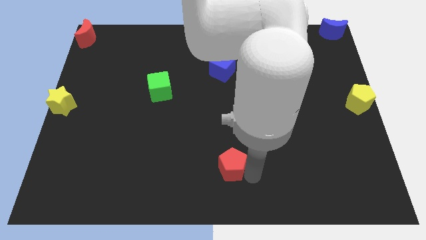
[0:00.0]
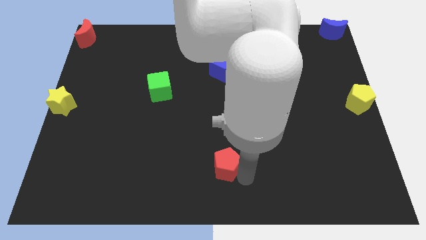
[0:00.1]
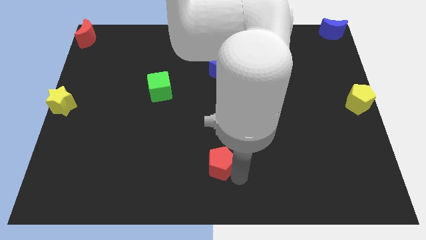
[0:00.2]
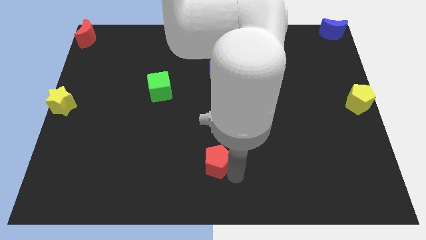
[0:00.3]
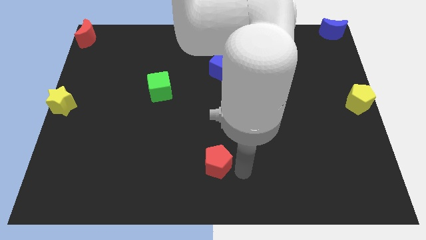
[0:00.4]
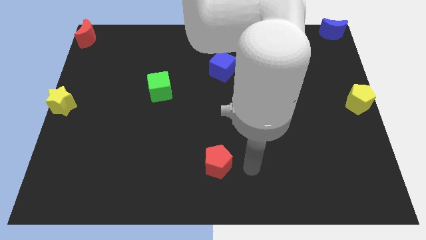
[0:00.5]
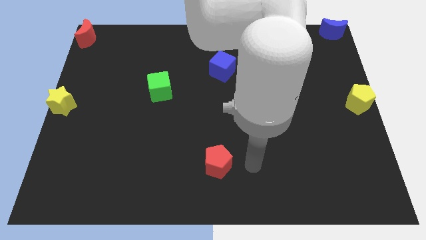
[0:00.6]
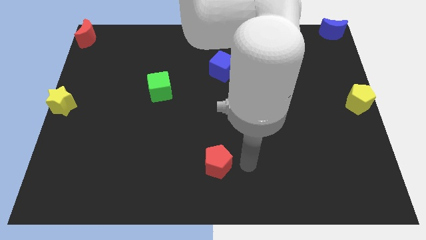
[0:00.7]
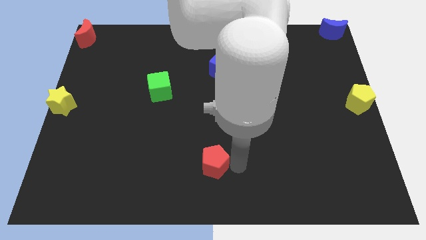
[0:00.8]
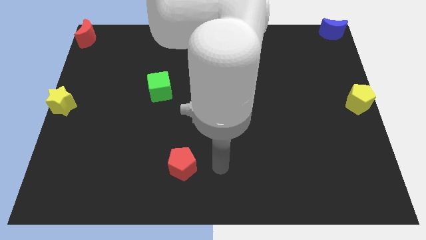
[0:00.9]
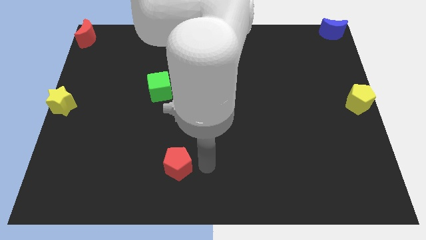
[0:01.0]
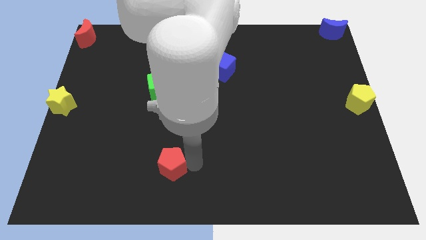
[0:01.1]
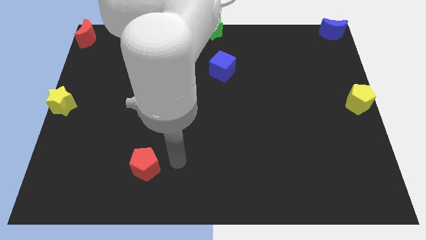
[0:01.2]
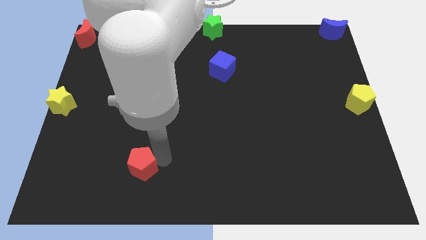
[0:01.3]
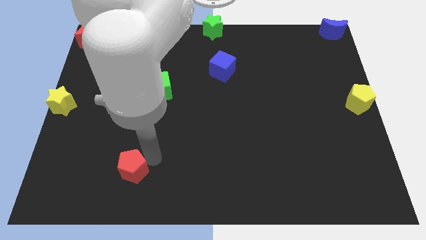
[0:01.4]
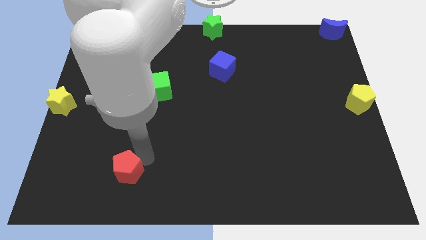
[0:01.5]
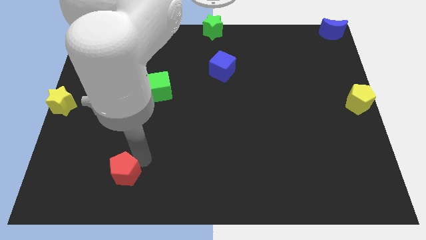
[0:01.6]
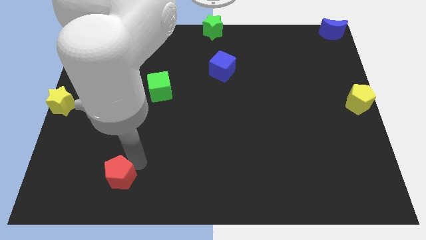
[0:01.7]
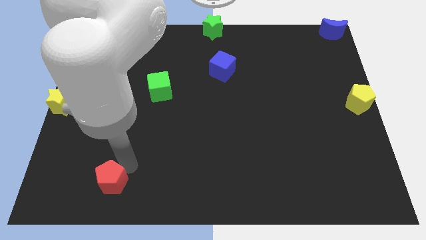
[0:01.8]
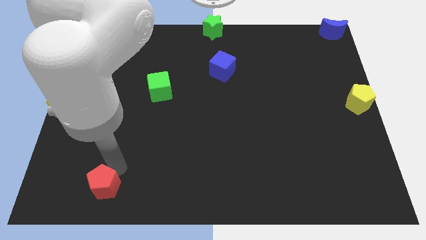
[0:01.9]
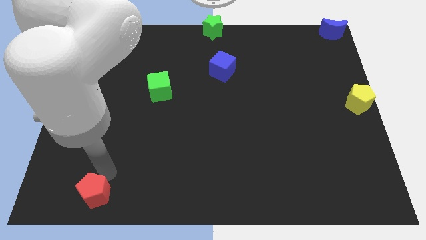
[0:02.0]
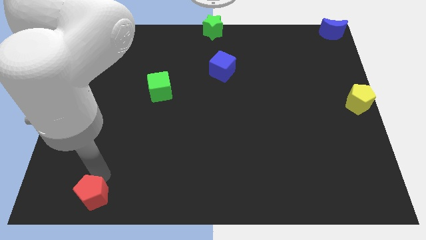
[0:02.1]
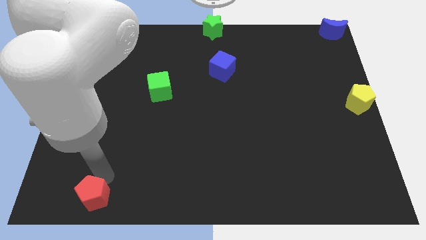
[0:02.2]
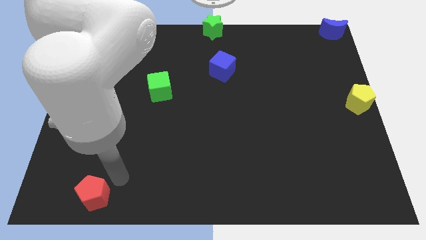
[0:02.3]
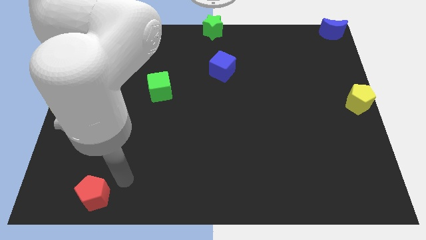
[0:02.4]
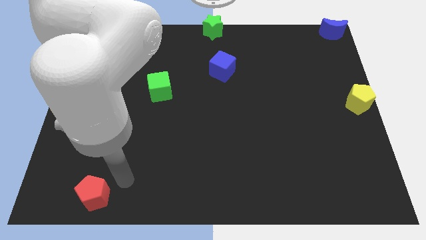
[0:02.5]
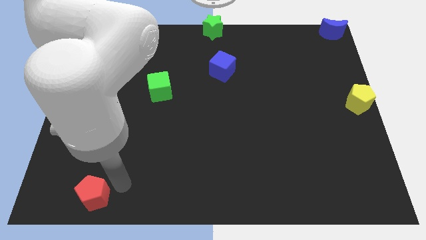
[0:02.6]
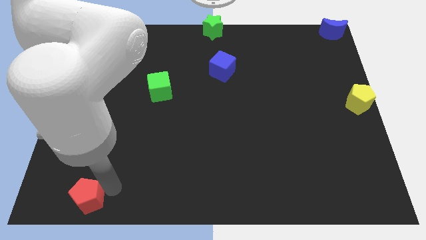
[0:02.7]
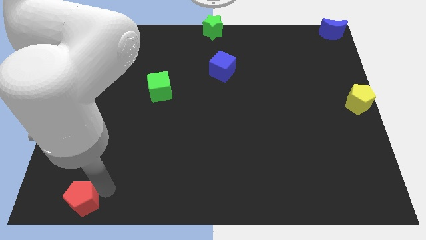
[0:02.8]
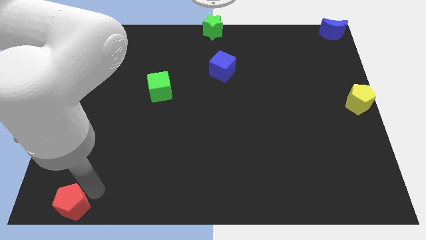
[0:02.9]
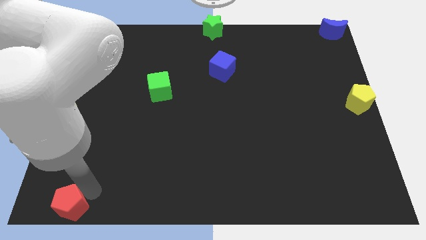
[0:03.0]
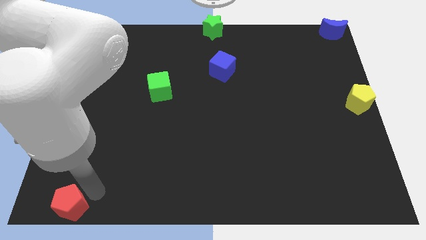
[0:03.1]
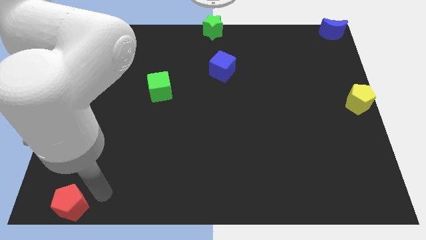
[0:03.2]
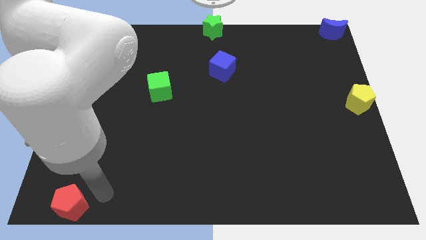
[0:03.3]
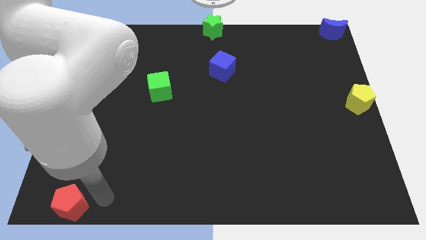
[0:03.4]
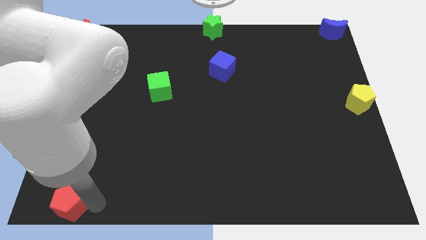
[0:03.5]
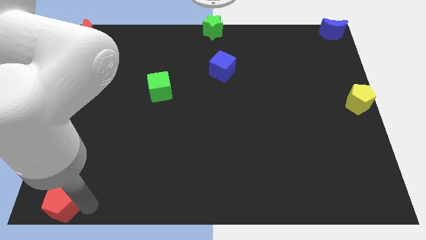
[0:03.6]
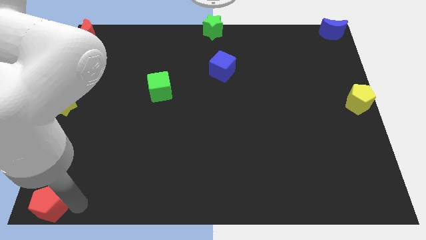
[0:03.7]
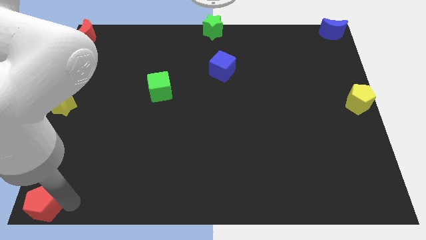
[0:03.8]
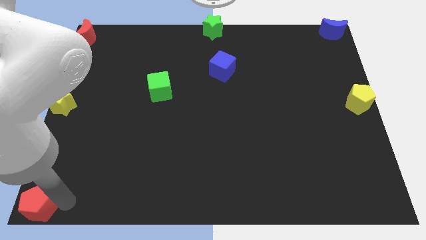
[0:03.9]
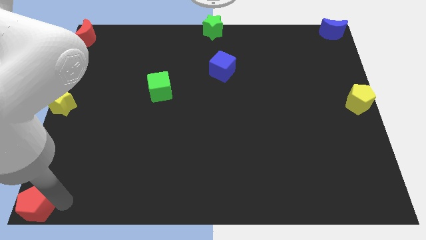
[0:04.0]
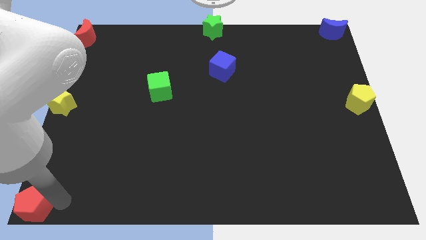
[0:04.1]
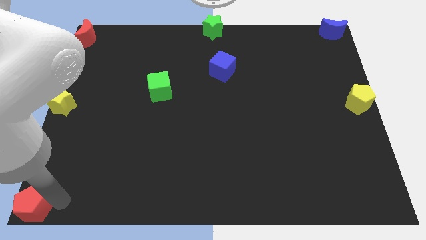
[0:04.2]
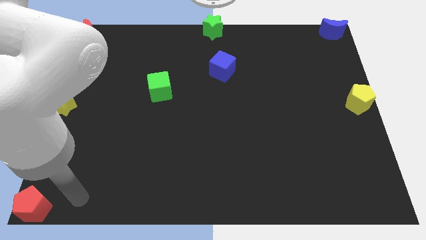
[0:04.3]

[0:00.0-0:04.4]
slide the red pentagon to the bottom left corner of the board

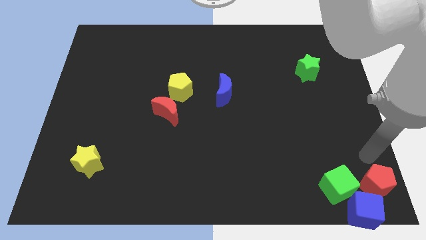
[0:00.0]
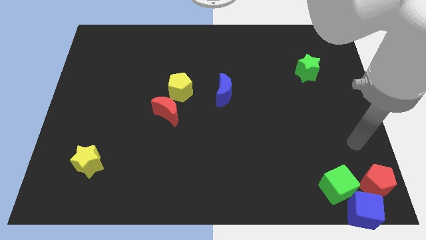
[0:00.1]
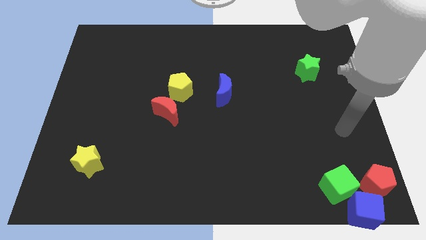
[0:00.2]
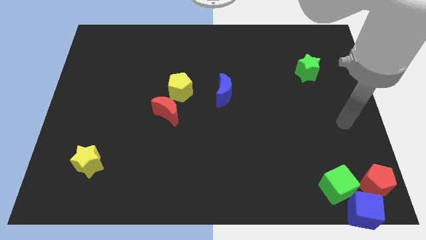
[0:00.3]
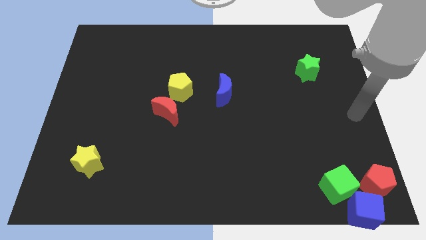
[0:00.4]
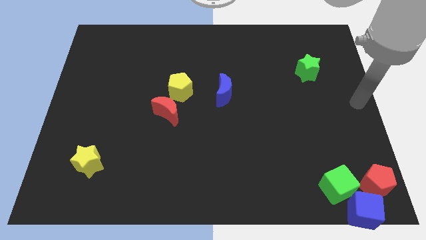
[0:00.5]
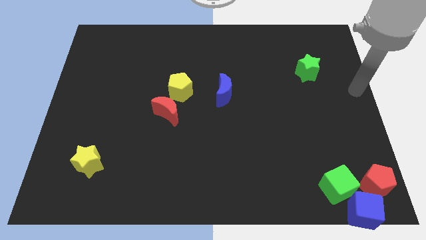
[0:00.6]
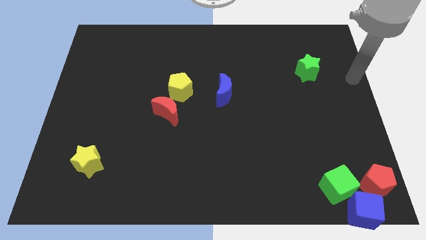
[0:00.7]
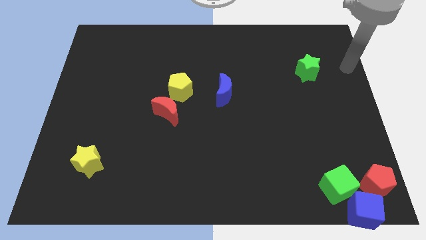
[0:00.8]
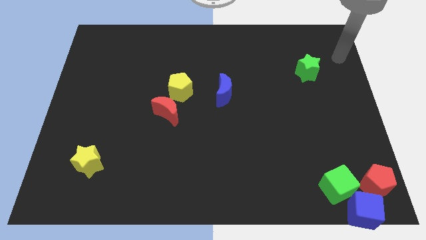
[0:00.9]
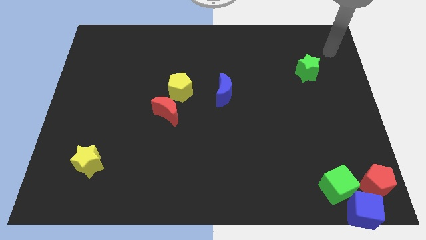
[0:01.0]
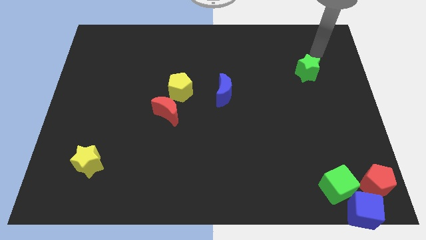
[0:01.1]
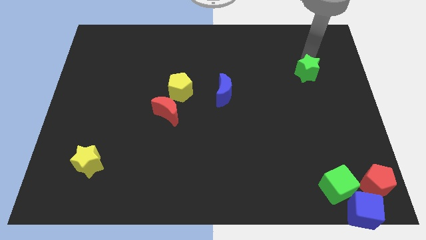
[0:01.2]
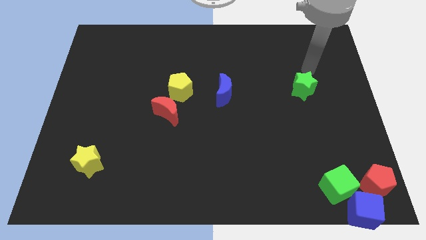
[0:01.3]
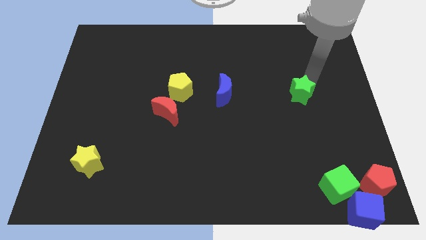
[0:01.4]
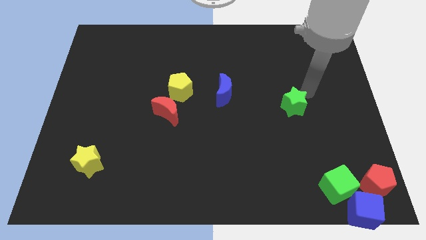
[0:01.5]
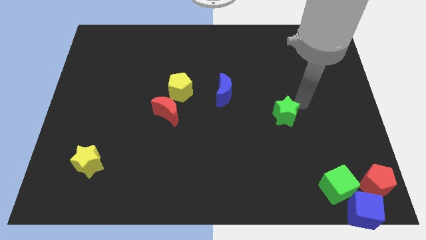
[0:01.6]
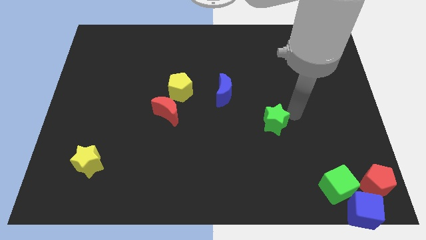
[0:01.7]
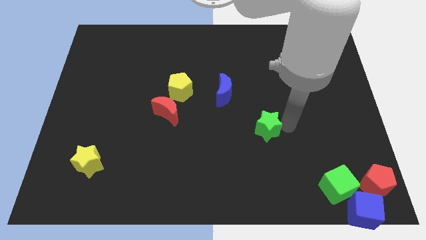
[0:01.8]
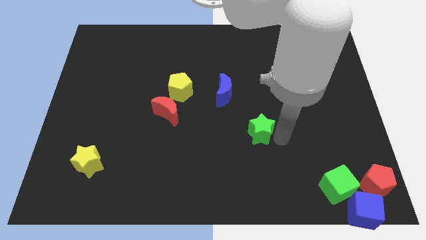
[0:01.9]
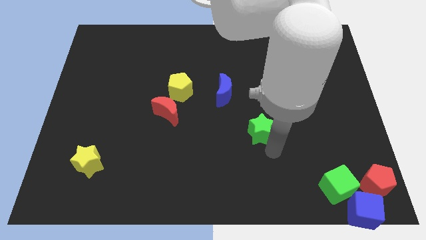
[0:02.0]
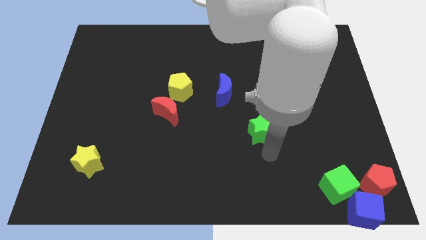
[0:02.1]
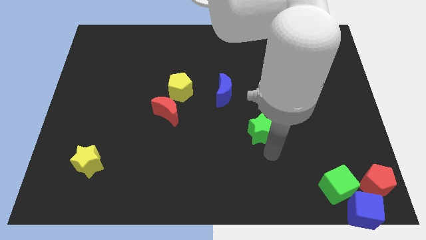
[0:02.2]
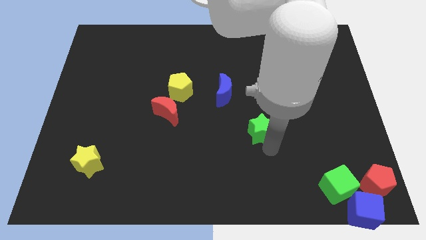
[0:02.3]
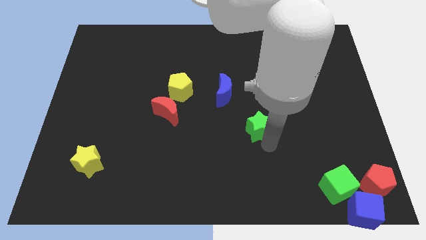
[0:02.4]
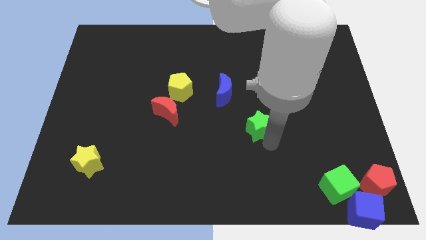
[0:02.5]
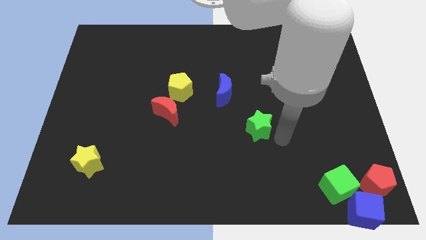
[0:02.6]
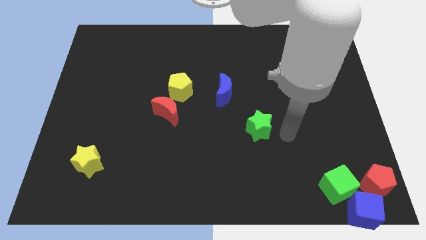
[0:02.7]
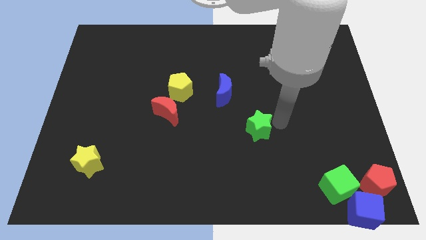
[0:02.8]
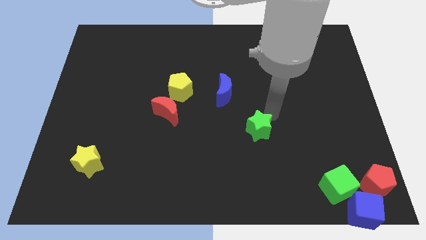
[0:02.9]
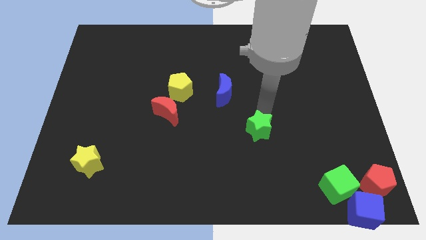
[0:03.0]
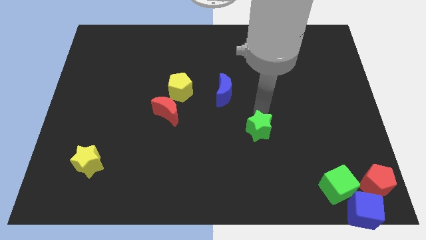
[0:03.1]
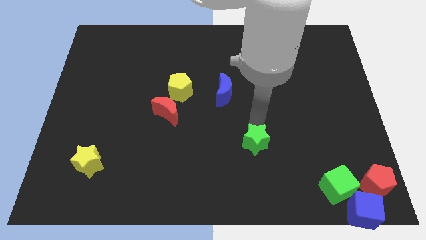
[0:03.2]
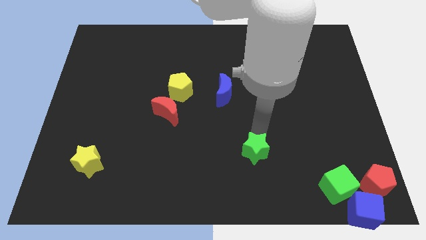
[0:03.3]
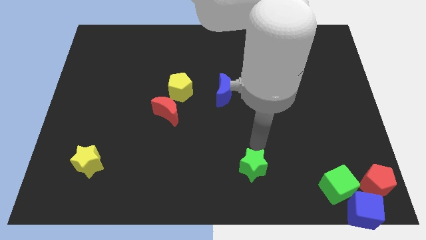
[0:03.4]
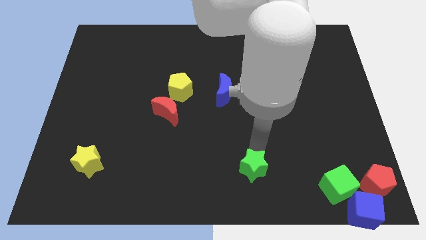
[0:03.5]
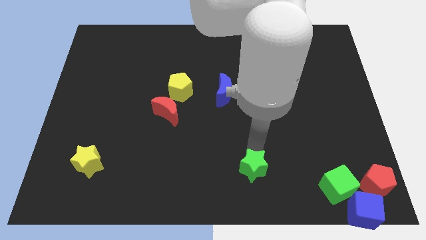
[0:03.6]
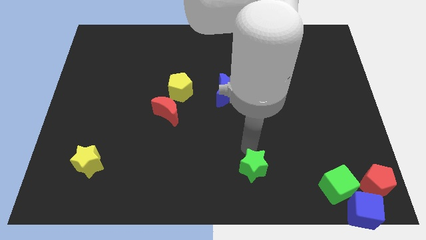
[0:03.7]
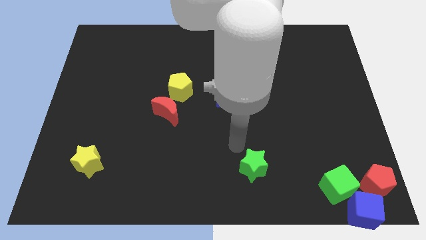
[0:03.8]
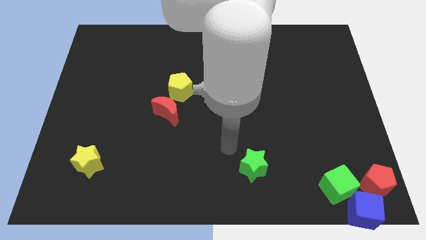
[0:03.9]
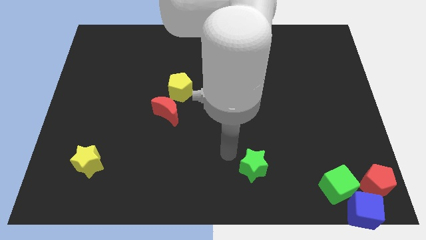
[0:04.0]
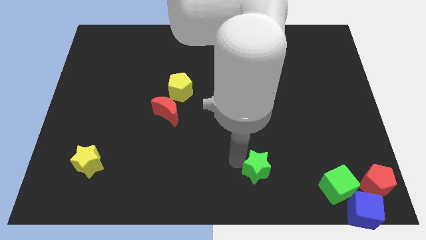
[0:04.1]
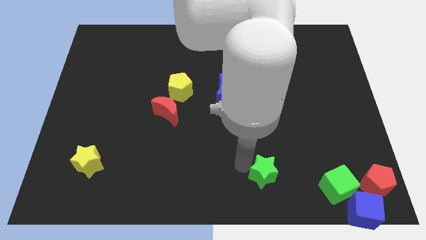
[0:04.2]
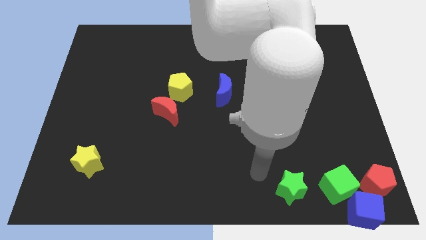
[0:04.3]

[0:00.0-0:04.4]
slide the green star to the left side of the green cube
